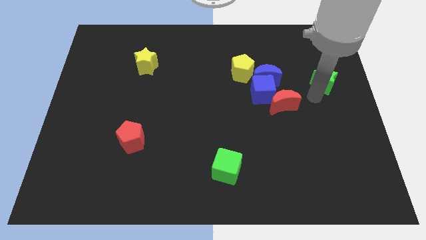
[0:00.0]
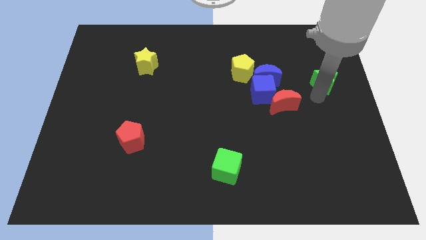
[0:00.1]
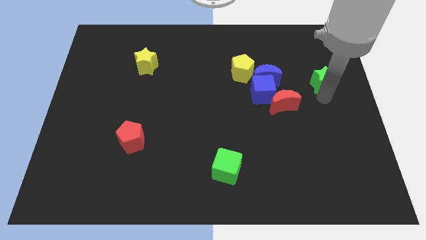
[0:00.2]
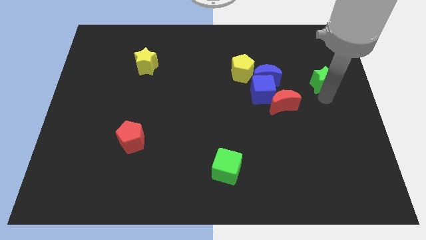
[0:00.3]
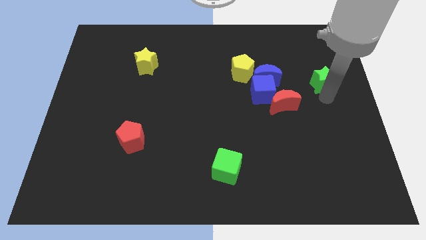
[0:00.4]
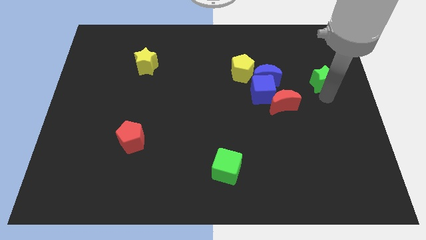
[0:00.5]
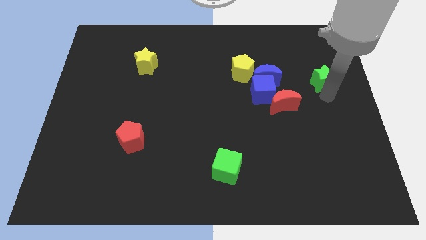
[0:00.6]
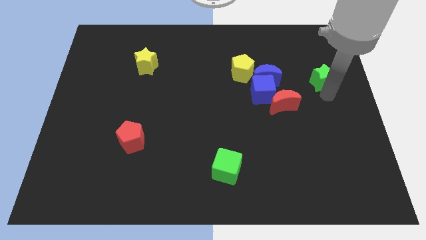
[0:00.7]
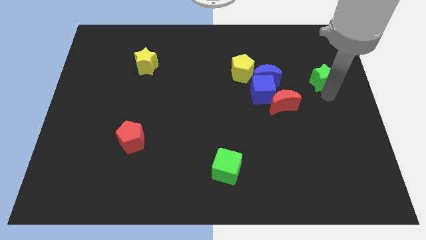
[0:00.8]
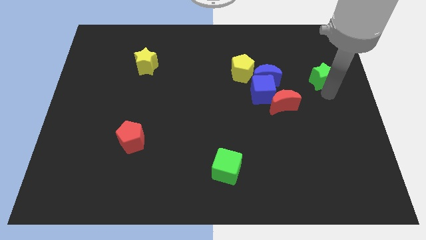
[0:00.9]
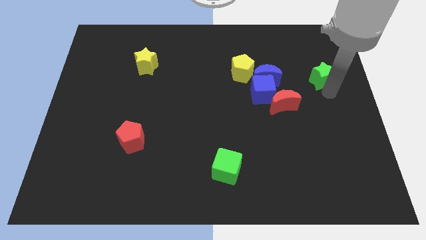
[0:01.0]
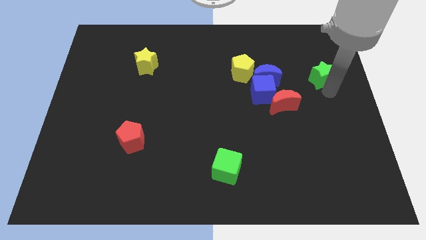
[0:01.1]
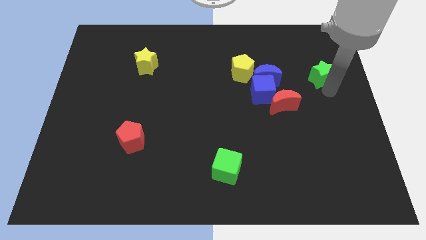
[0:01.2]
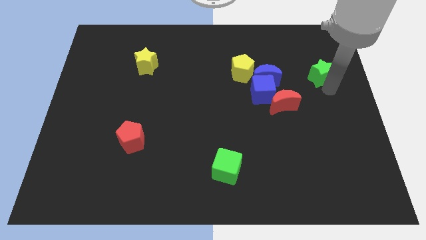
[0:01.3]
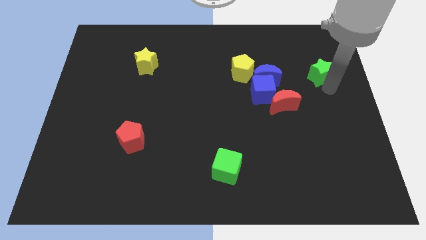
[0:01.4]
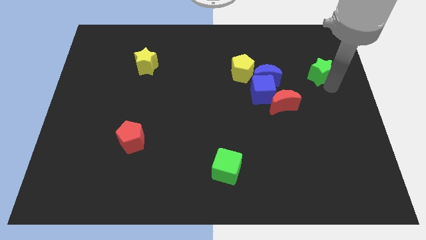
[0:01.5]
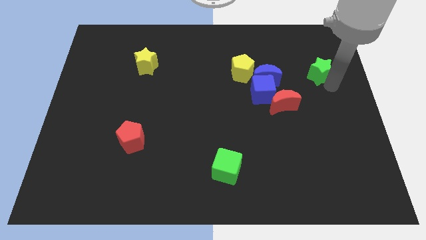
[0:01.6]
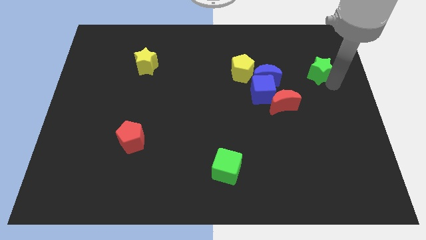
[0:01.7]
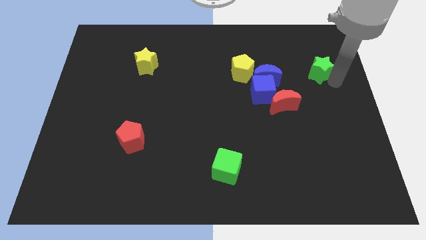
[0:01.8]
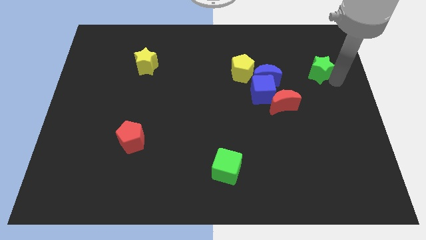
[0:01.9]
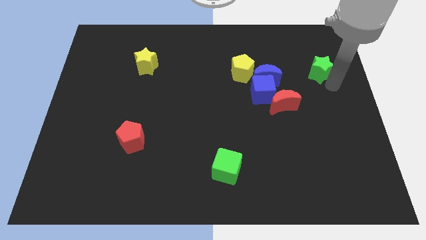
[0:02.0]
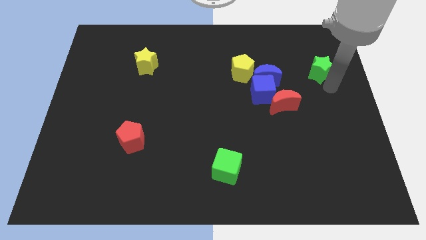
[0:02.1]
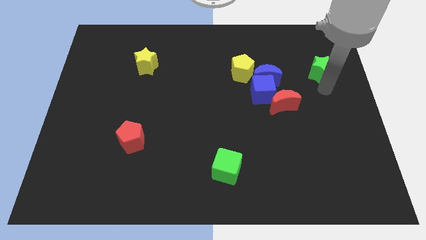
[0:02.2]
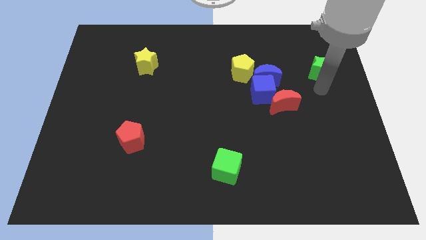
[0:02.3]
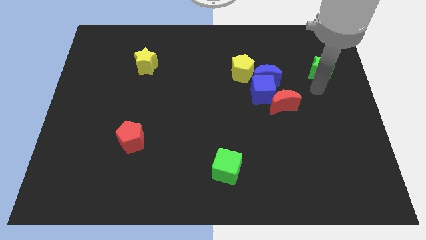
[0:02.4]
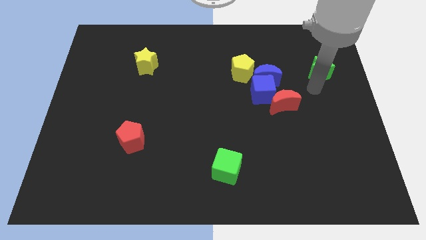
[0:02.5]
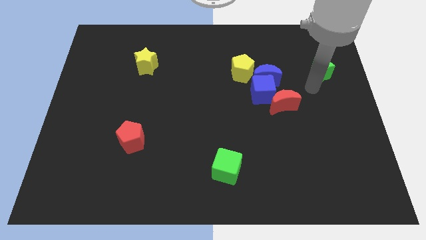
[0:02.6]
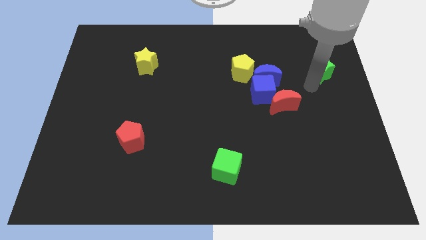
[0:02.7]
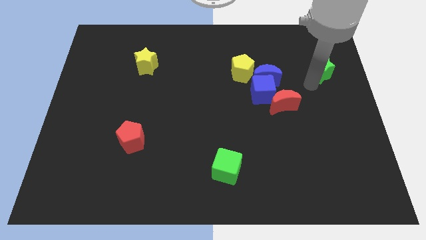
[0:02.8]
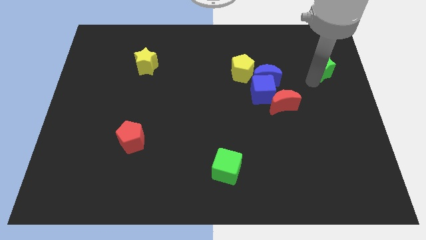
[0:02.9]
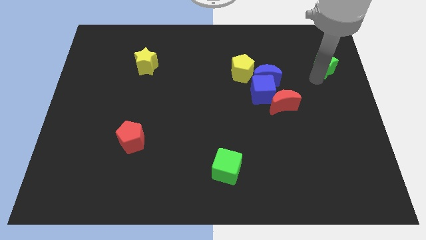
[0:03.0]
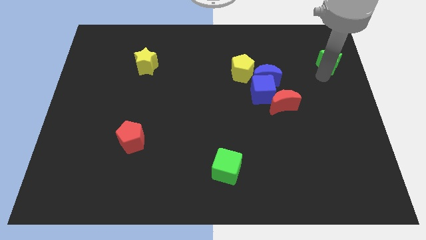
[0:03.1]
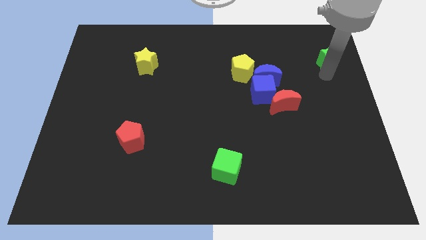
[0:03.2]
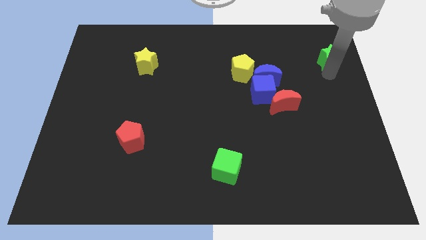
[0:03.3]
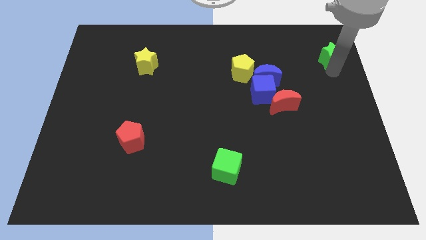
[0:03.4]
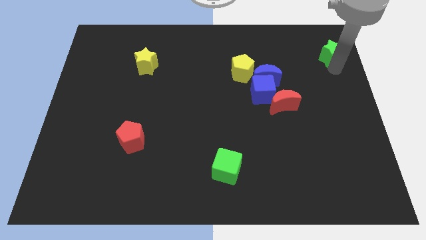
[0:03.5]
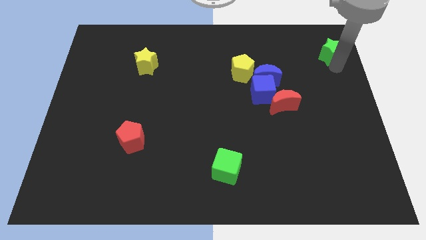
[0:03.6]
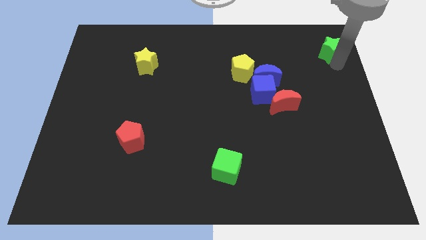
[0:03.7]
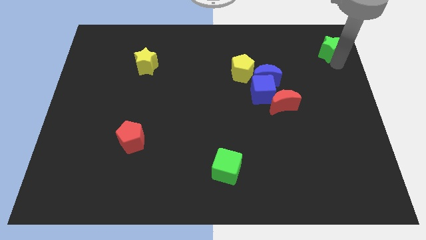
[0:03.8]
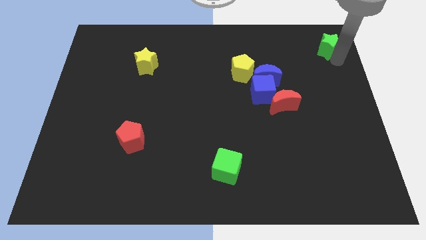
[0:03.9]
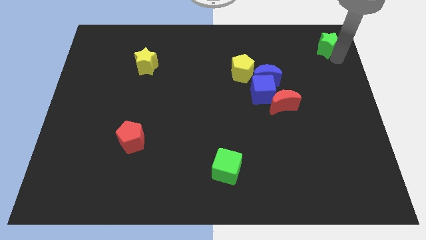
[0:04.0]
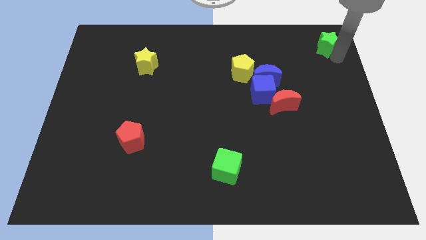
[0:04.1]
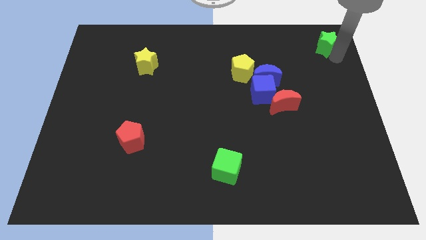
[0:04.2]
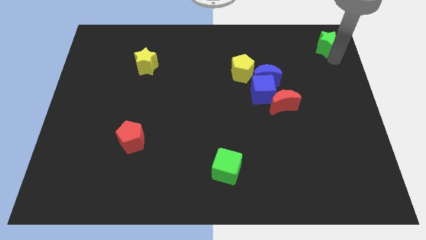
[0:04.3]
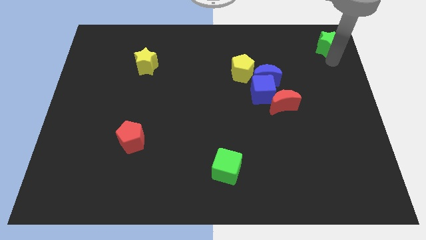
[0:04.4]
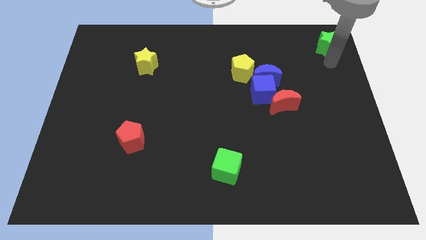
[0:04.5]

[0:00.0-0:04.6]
push the green star towards the top right corner of the board

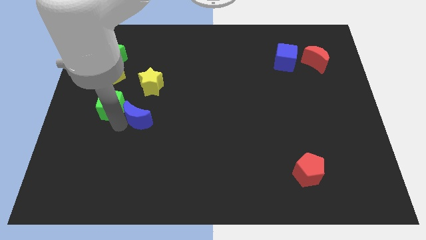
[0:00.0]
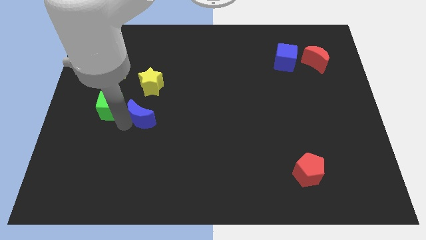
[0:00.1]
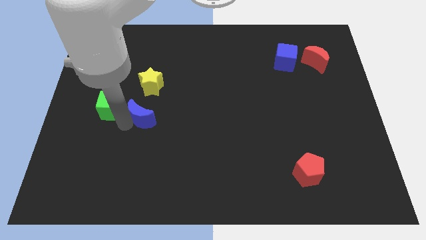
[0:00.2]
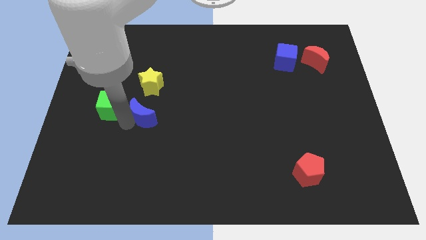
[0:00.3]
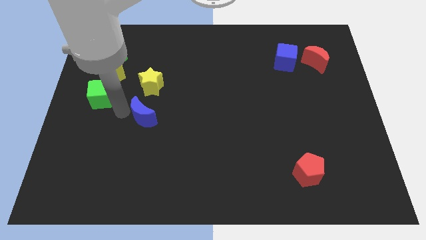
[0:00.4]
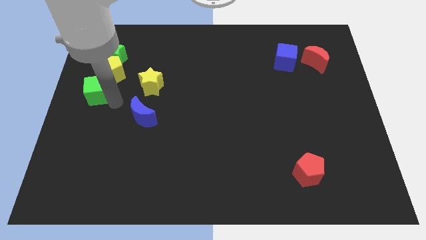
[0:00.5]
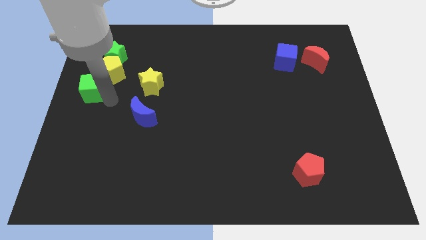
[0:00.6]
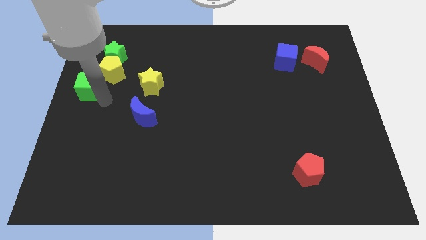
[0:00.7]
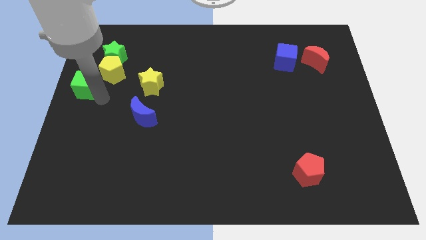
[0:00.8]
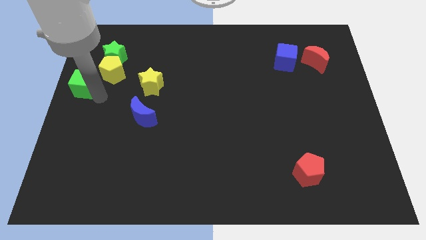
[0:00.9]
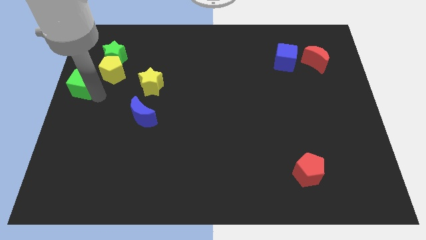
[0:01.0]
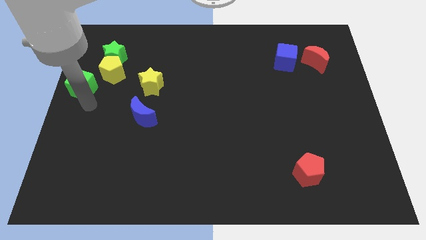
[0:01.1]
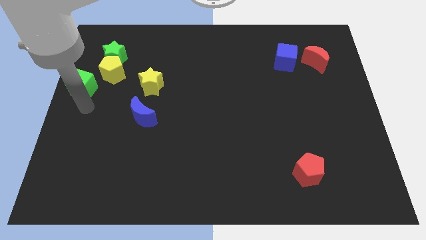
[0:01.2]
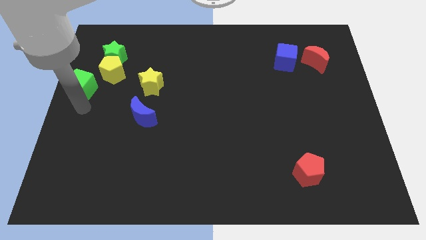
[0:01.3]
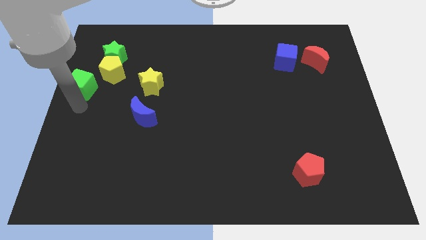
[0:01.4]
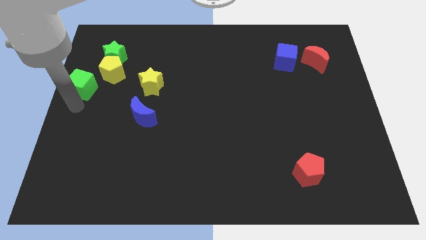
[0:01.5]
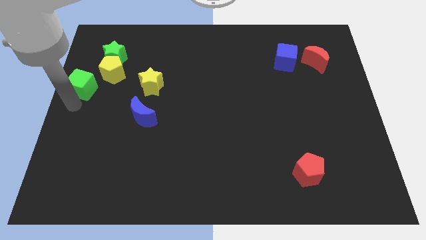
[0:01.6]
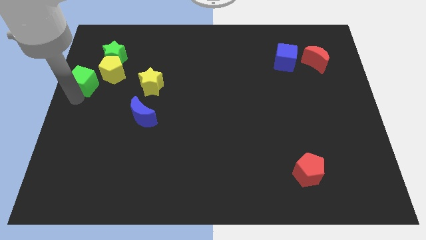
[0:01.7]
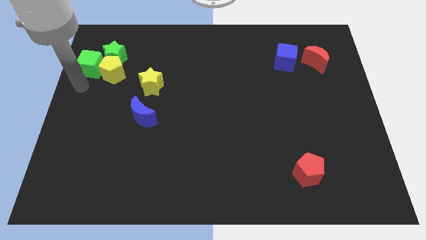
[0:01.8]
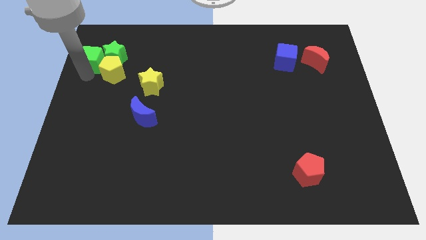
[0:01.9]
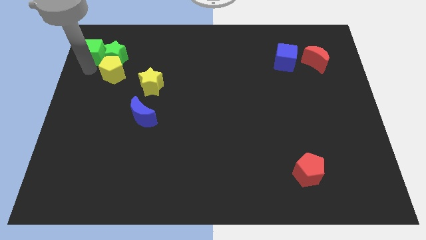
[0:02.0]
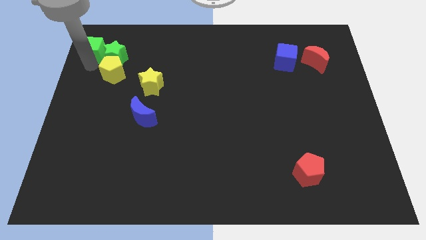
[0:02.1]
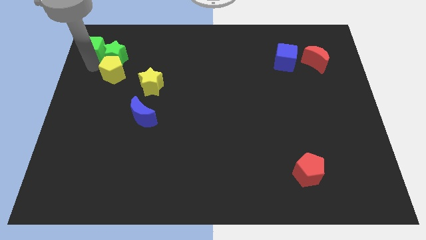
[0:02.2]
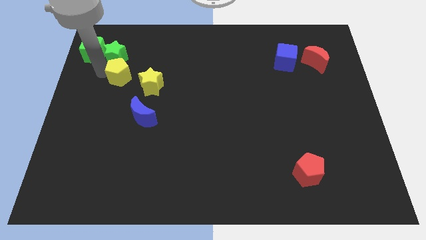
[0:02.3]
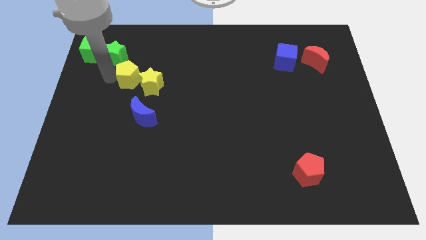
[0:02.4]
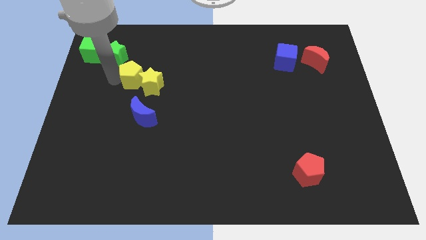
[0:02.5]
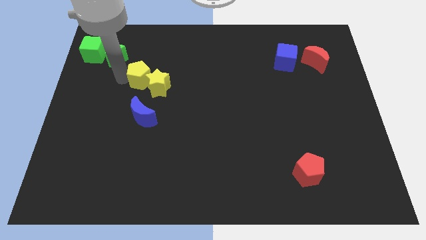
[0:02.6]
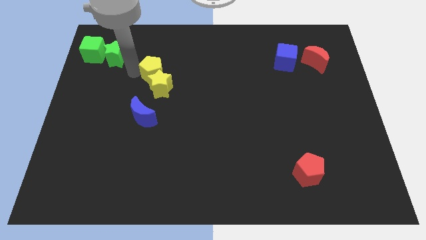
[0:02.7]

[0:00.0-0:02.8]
place the green cube to the left of the green star

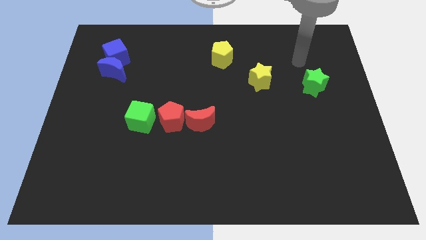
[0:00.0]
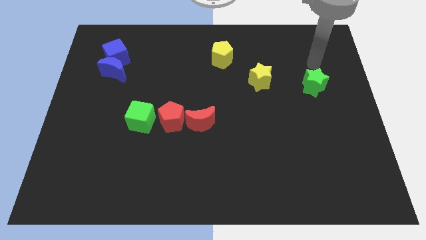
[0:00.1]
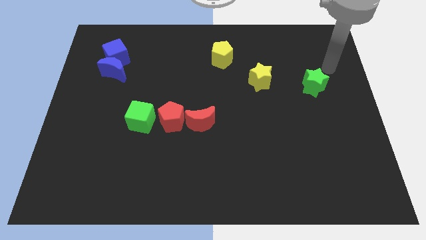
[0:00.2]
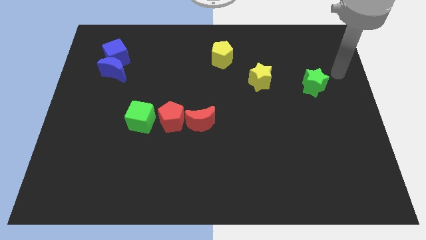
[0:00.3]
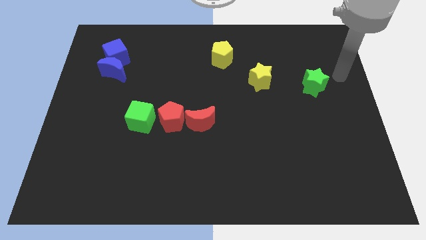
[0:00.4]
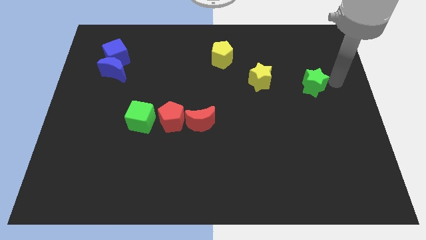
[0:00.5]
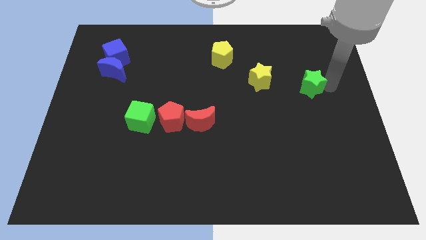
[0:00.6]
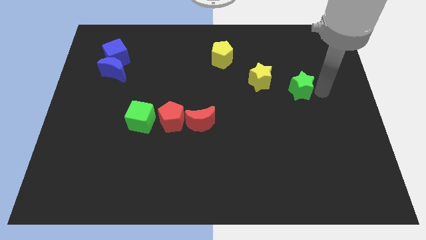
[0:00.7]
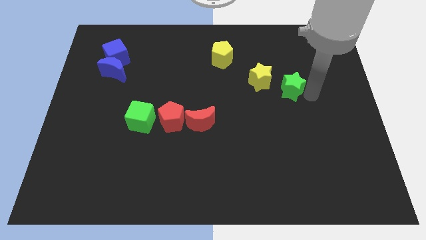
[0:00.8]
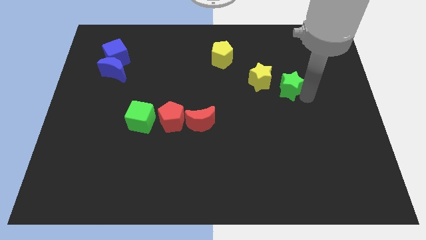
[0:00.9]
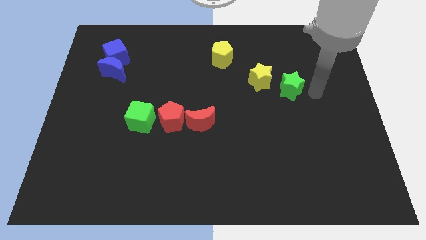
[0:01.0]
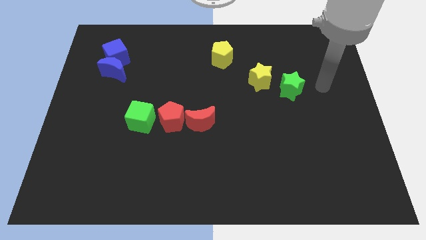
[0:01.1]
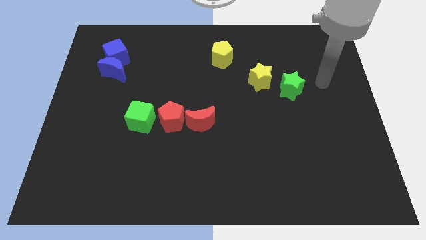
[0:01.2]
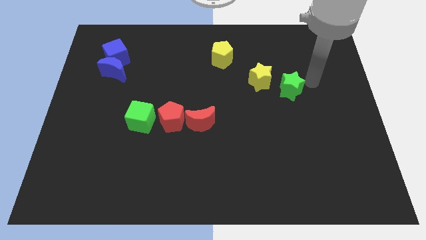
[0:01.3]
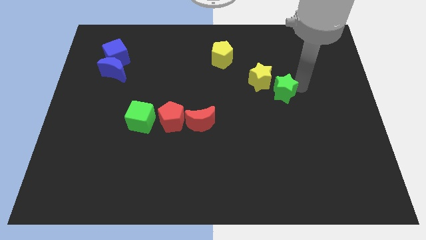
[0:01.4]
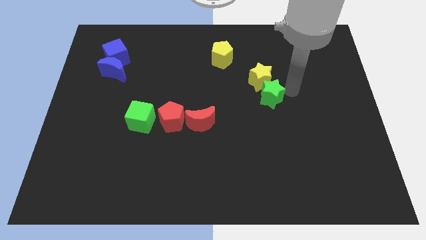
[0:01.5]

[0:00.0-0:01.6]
push the green star to the right side of the yellow star
